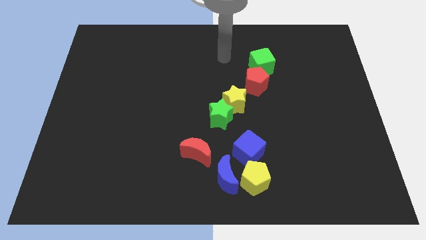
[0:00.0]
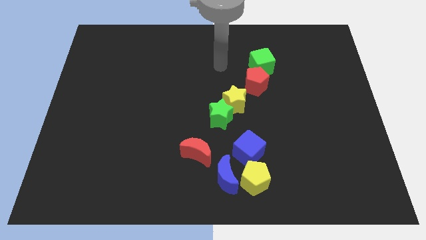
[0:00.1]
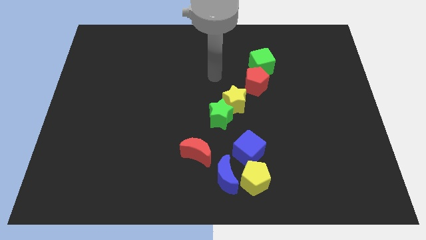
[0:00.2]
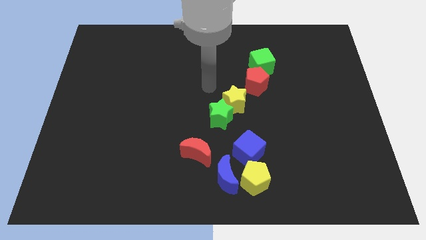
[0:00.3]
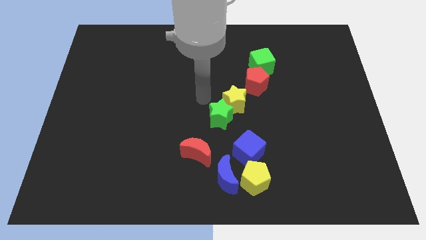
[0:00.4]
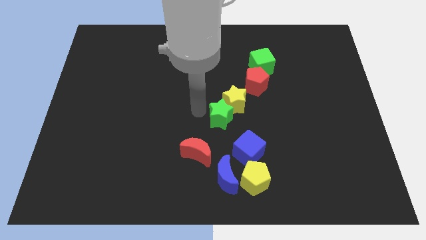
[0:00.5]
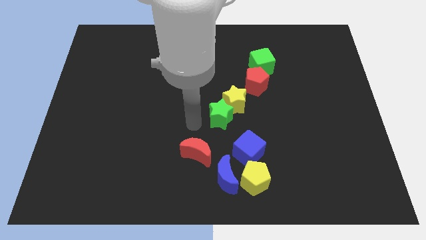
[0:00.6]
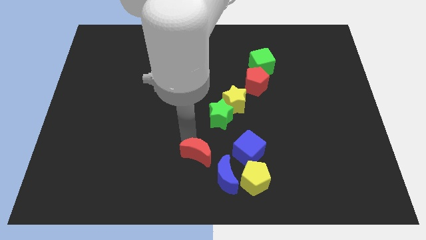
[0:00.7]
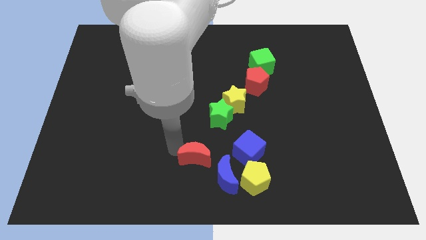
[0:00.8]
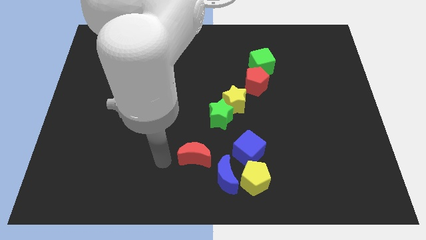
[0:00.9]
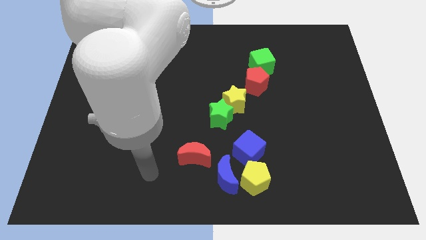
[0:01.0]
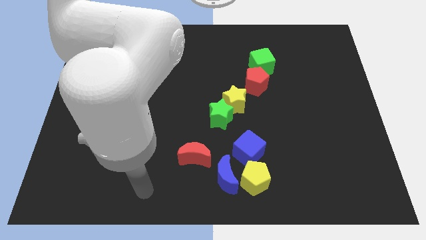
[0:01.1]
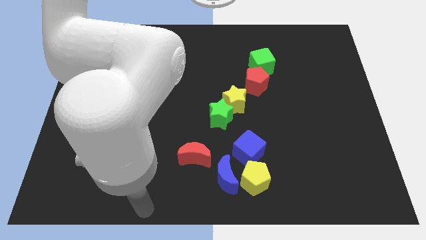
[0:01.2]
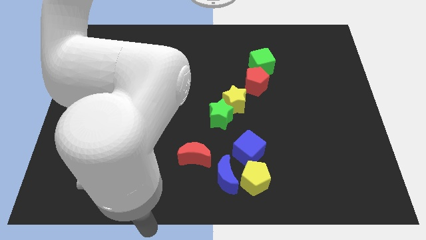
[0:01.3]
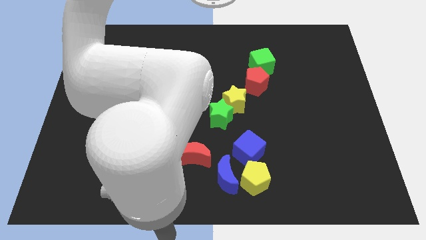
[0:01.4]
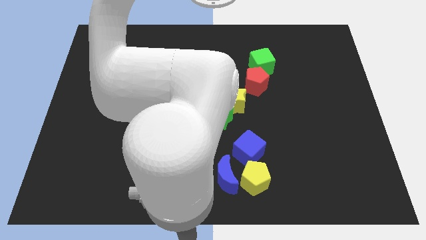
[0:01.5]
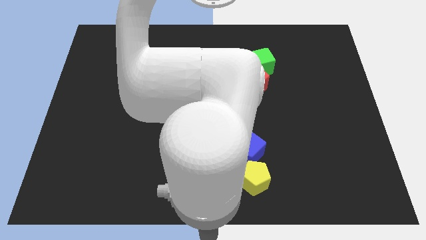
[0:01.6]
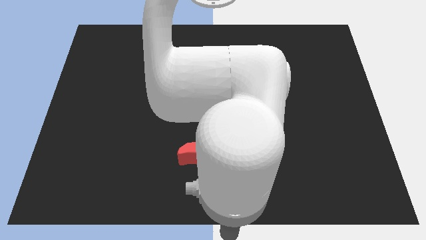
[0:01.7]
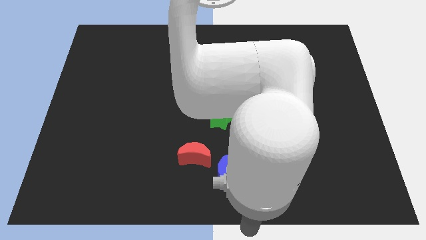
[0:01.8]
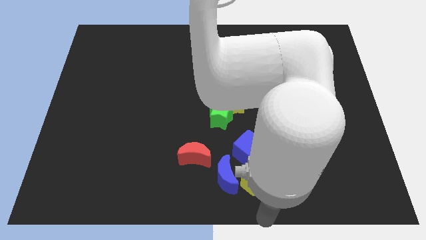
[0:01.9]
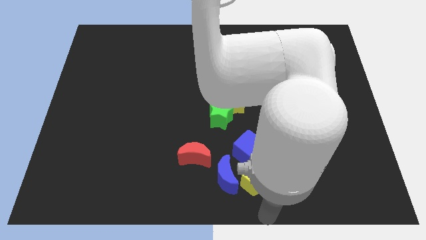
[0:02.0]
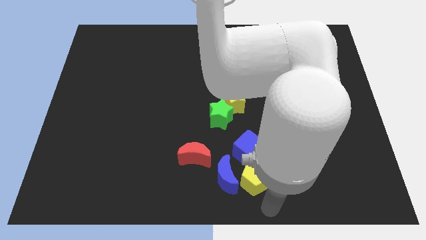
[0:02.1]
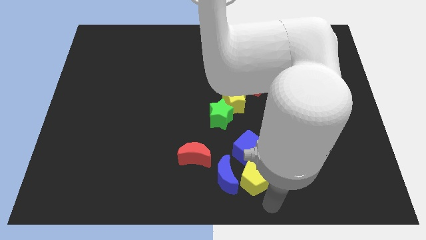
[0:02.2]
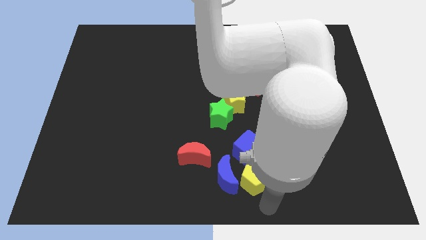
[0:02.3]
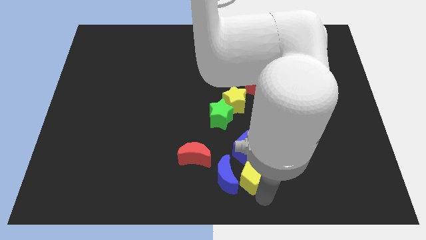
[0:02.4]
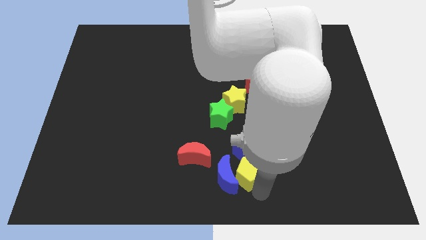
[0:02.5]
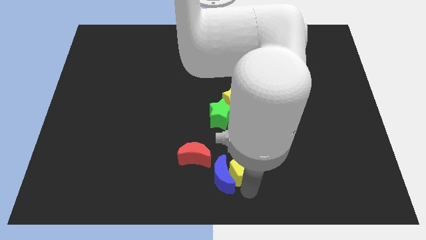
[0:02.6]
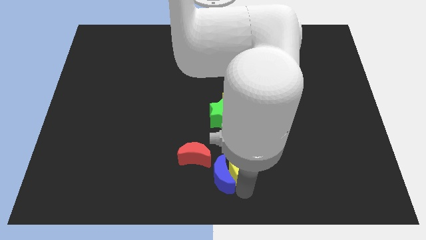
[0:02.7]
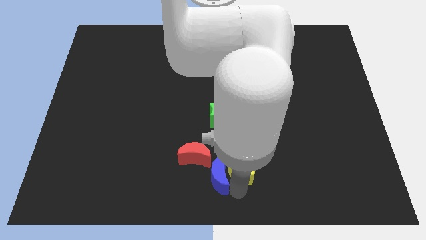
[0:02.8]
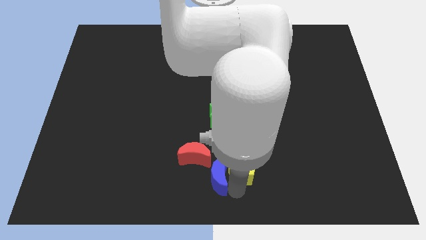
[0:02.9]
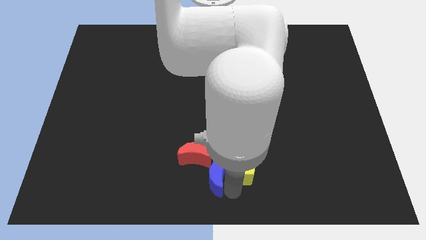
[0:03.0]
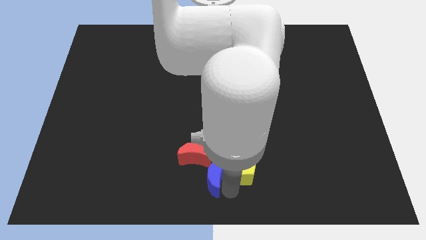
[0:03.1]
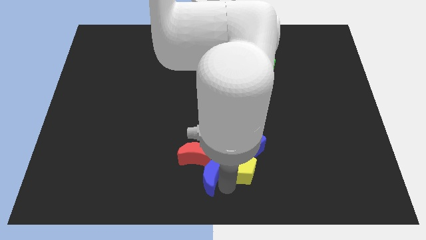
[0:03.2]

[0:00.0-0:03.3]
tap the red moon and yellow pentagon

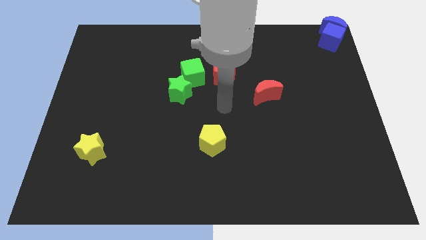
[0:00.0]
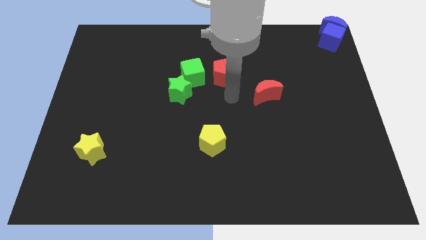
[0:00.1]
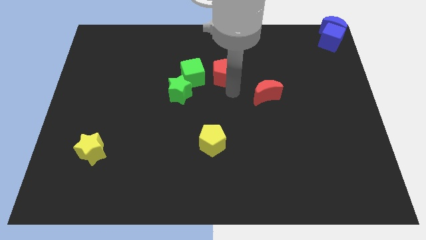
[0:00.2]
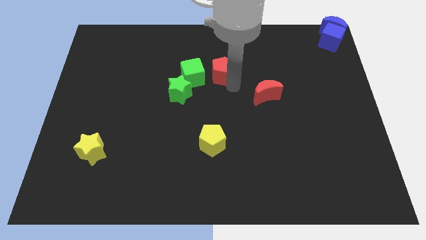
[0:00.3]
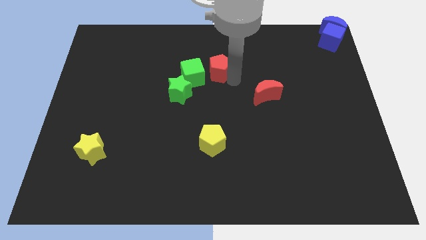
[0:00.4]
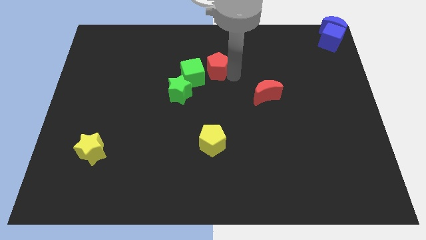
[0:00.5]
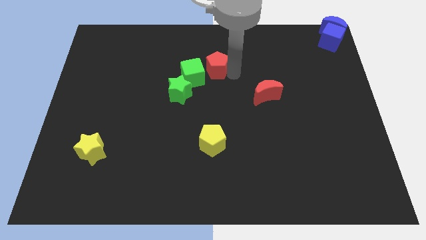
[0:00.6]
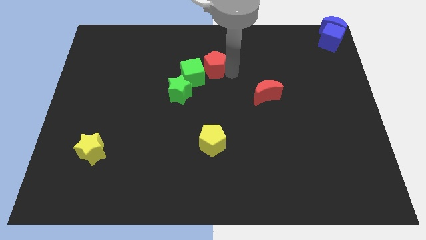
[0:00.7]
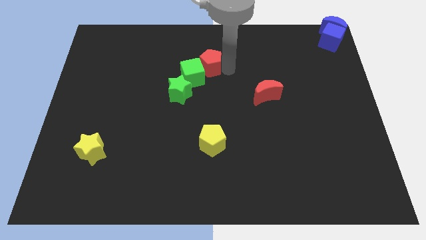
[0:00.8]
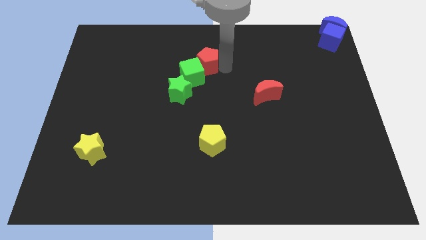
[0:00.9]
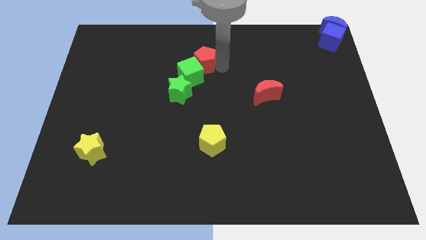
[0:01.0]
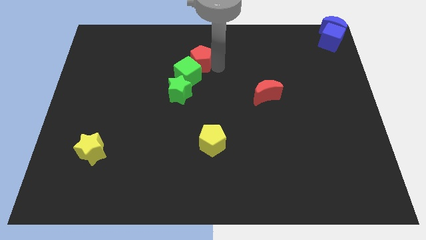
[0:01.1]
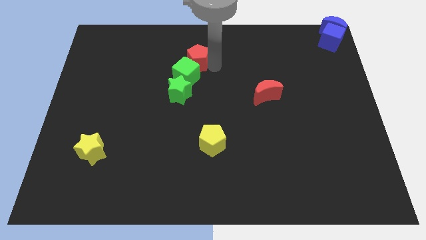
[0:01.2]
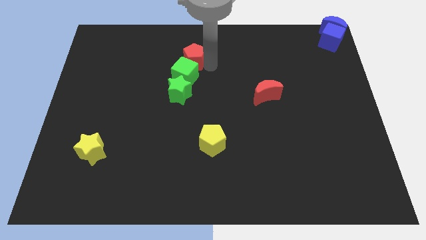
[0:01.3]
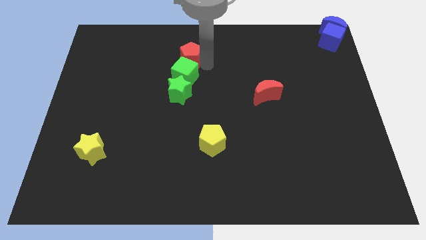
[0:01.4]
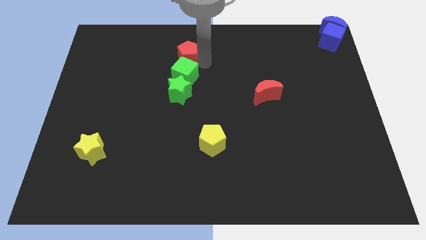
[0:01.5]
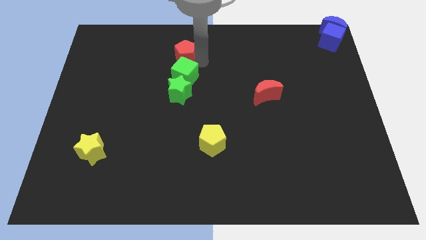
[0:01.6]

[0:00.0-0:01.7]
push the red pentagon above the green cube

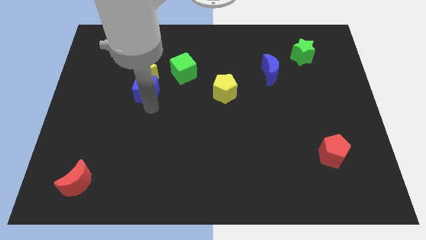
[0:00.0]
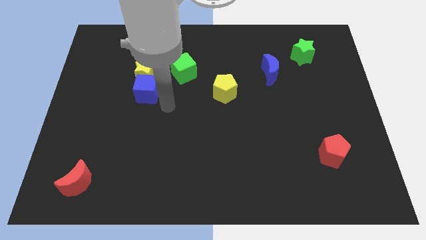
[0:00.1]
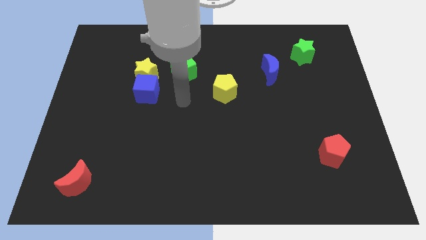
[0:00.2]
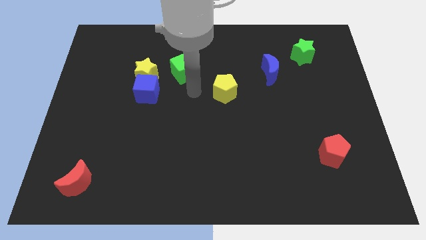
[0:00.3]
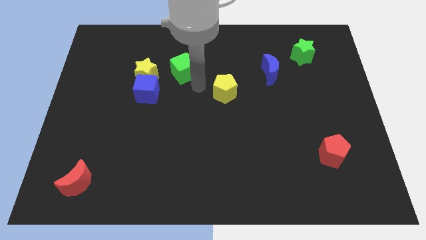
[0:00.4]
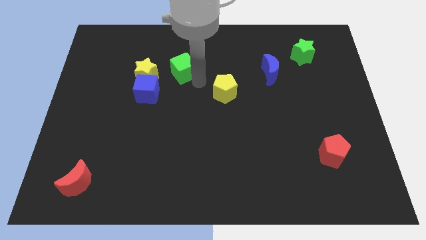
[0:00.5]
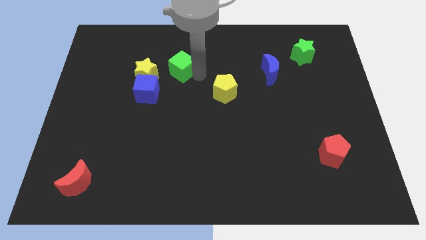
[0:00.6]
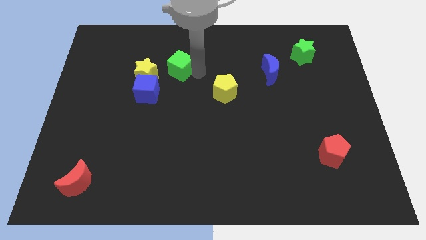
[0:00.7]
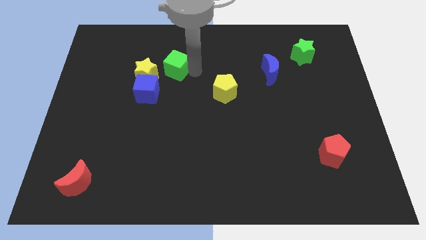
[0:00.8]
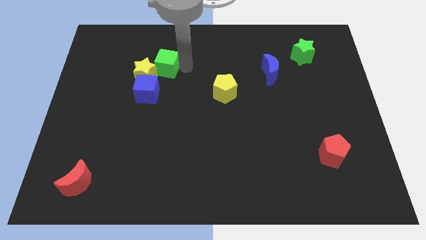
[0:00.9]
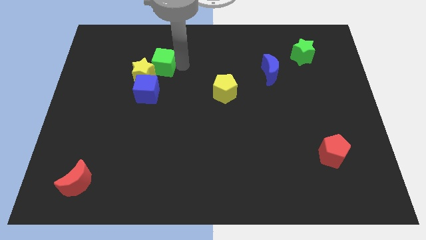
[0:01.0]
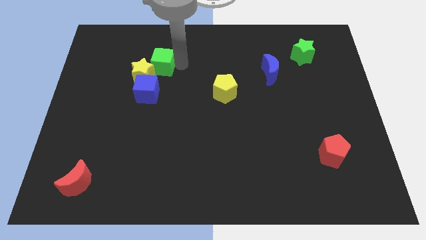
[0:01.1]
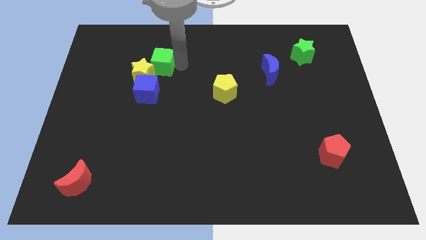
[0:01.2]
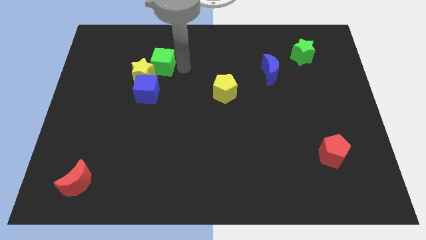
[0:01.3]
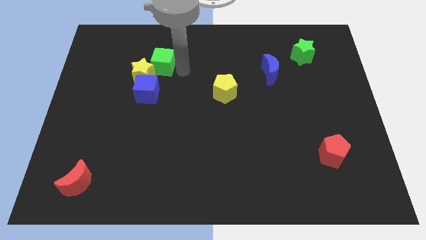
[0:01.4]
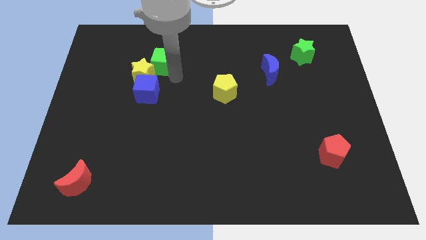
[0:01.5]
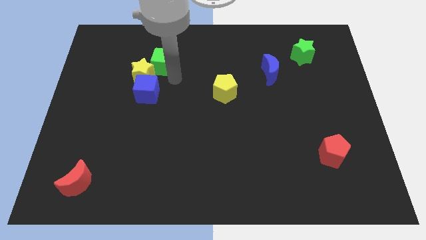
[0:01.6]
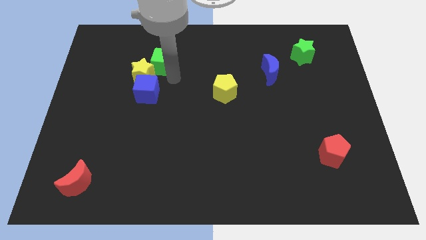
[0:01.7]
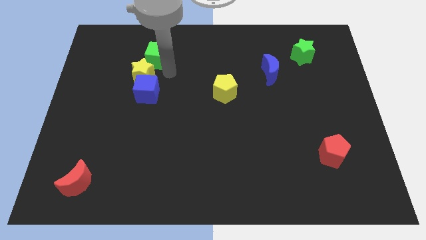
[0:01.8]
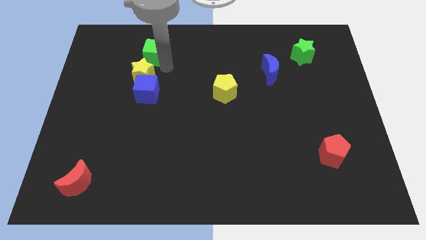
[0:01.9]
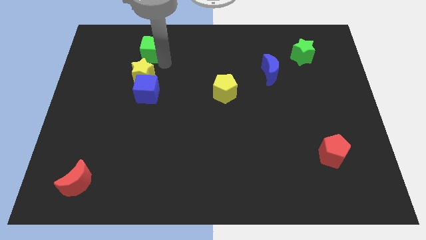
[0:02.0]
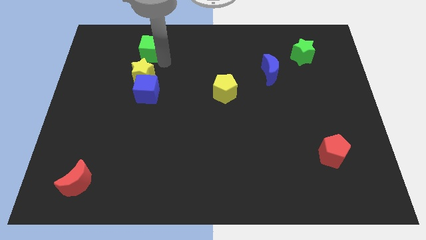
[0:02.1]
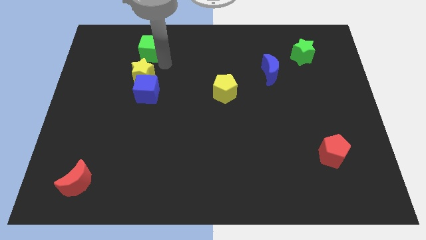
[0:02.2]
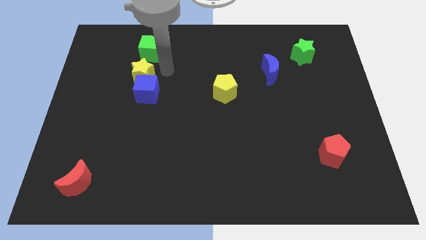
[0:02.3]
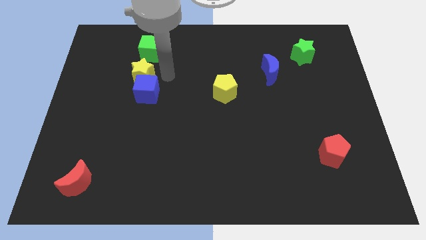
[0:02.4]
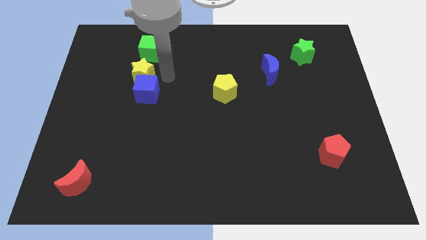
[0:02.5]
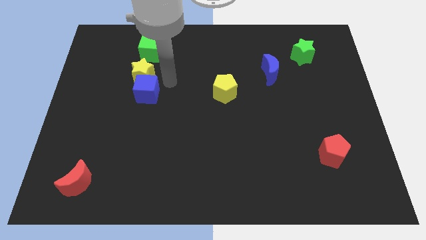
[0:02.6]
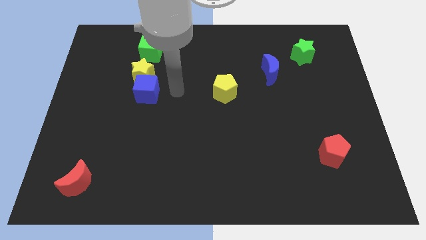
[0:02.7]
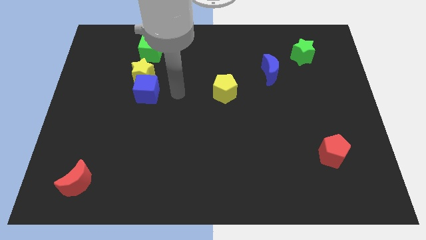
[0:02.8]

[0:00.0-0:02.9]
move the green cube to the top right of the yellow star

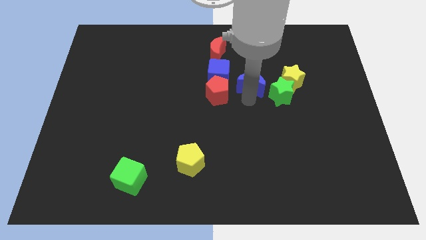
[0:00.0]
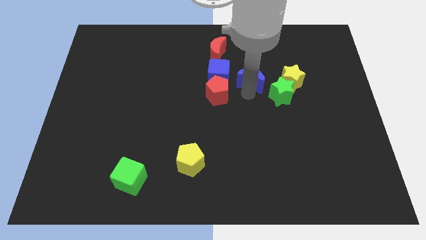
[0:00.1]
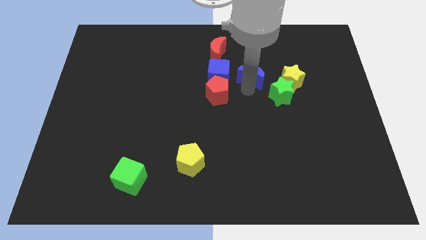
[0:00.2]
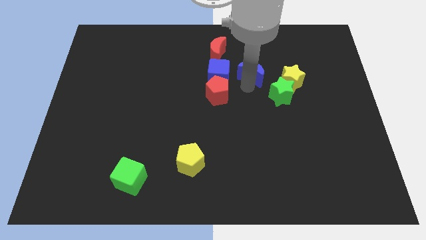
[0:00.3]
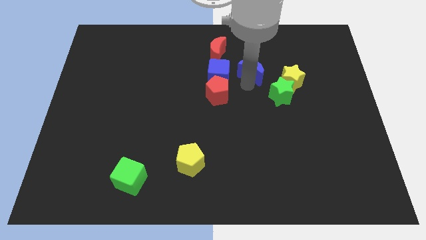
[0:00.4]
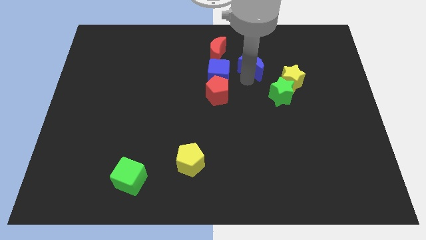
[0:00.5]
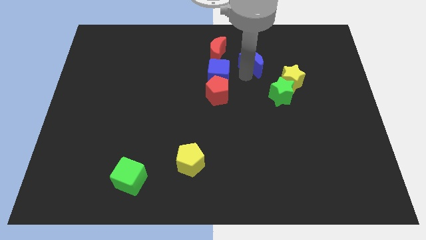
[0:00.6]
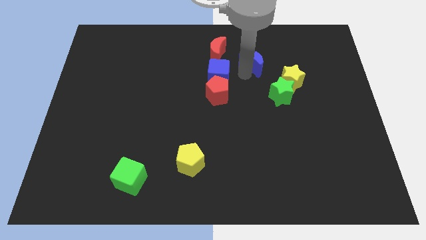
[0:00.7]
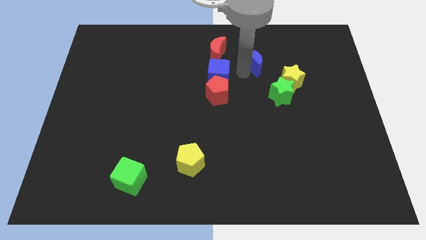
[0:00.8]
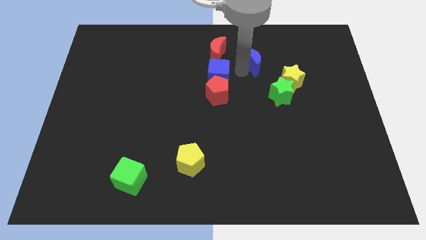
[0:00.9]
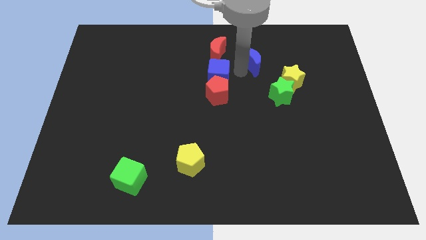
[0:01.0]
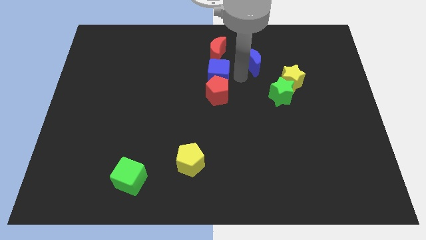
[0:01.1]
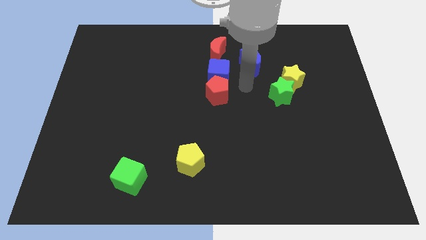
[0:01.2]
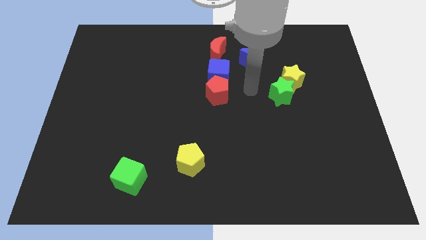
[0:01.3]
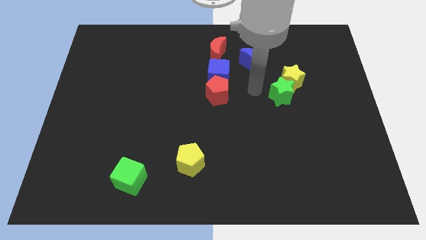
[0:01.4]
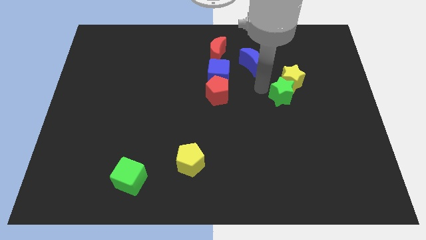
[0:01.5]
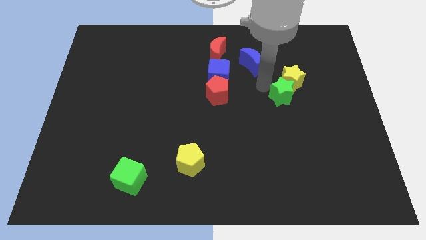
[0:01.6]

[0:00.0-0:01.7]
push the blue moon diagonally top right to blue cube
